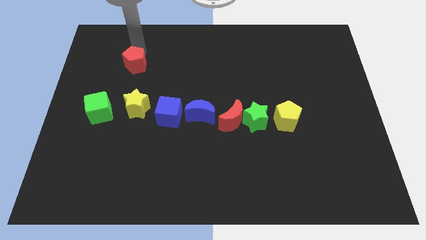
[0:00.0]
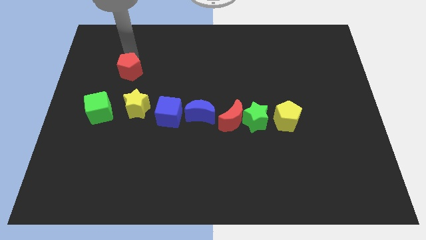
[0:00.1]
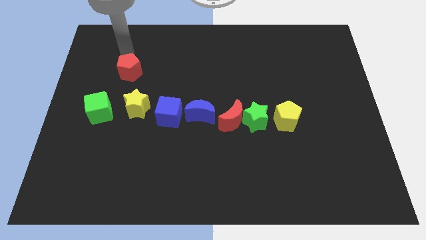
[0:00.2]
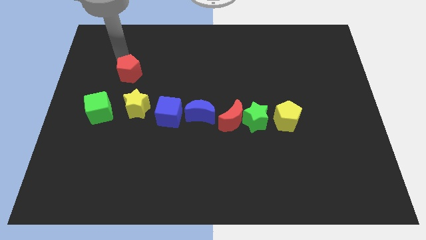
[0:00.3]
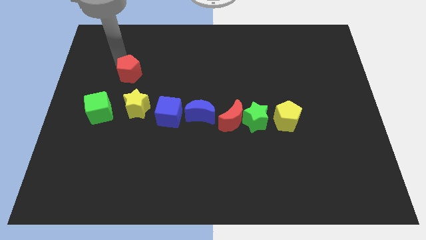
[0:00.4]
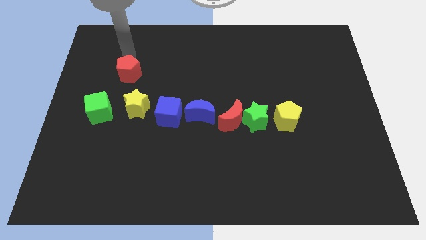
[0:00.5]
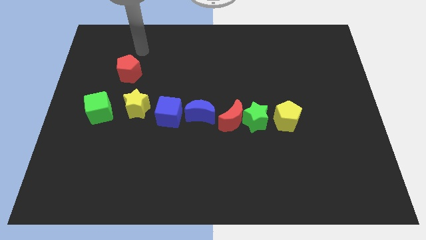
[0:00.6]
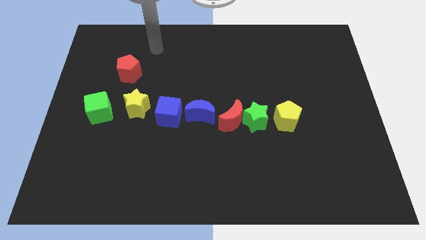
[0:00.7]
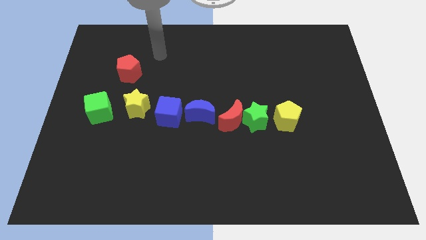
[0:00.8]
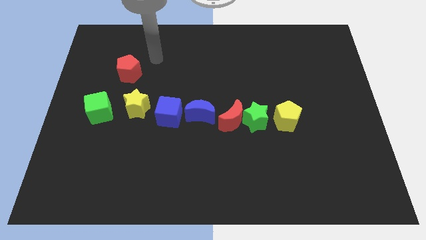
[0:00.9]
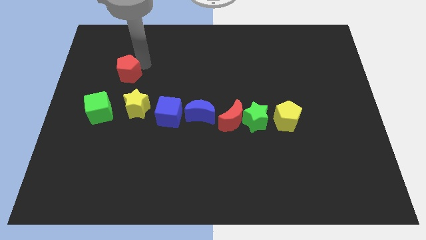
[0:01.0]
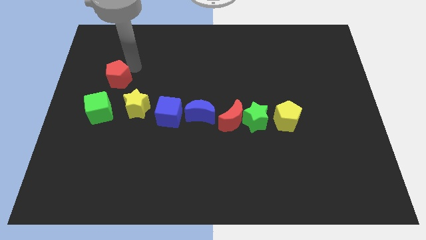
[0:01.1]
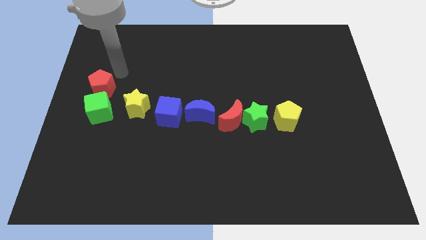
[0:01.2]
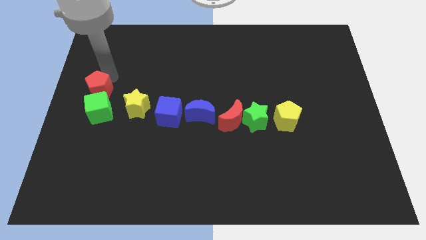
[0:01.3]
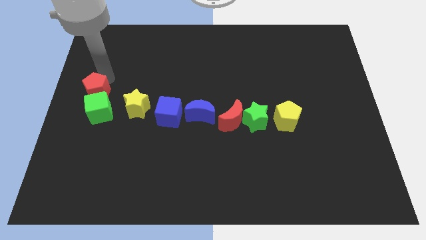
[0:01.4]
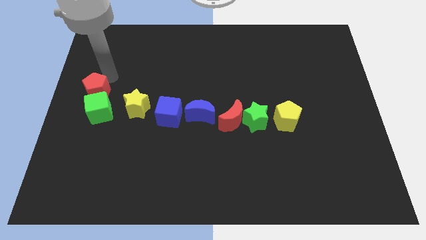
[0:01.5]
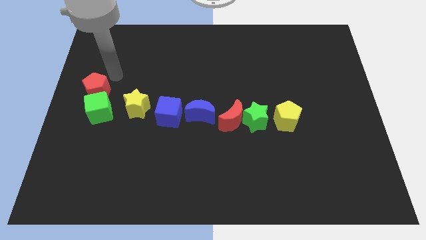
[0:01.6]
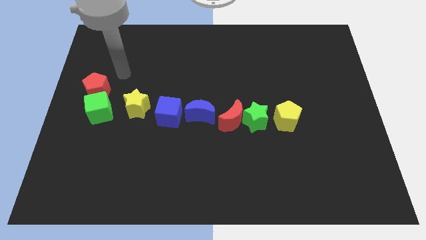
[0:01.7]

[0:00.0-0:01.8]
move the red pentagon above the green cube

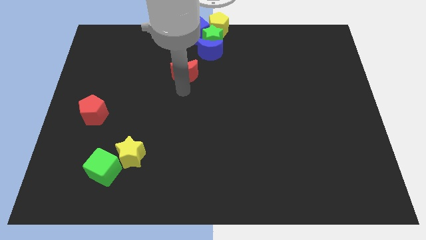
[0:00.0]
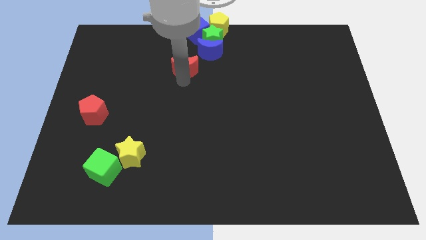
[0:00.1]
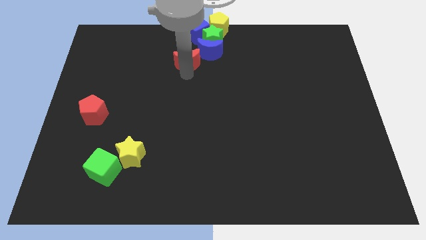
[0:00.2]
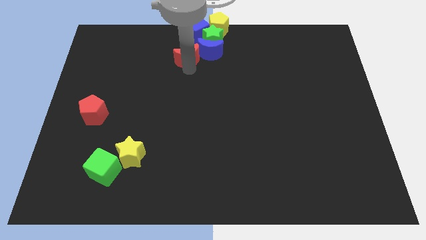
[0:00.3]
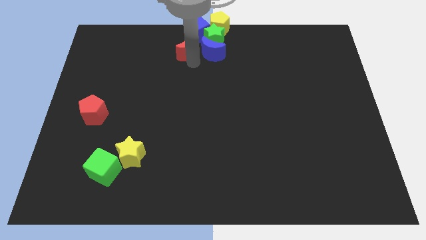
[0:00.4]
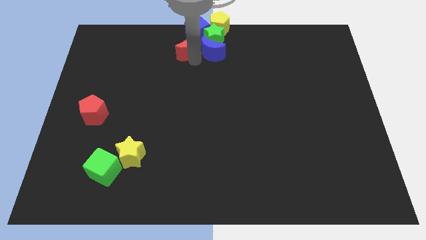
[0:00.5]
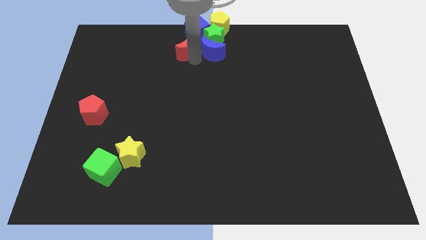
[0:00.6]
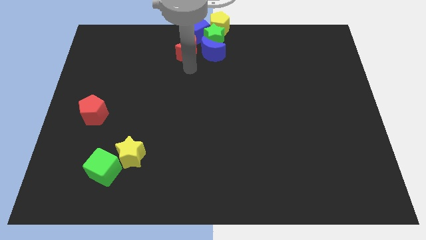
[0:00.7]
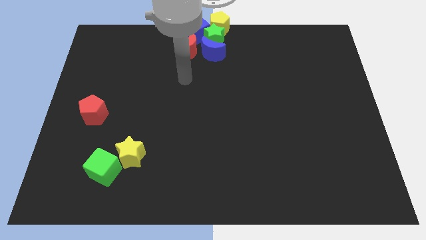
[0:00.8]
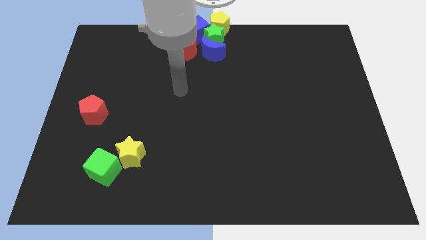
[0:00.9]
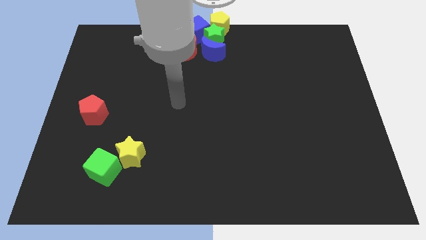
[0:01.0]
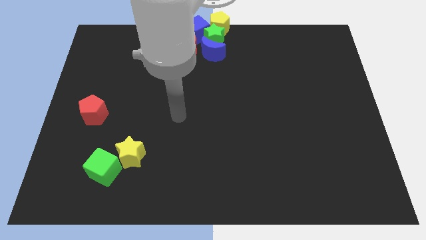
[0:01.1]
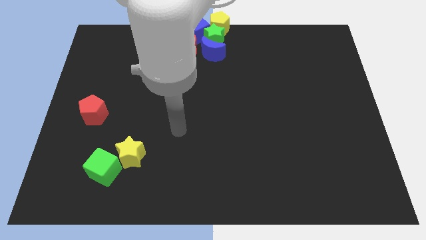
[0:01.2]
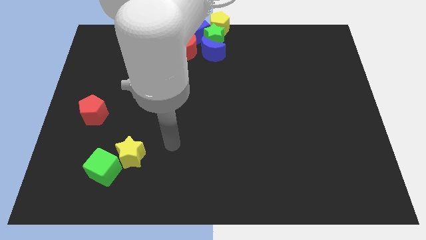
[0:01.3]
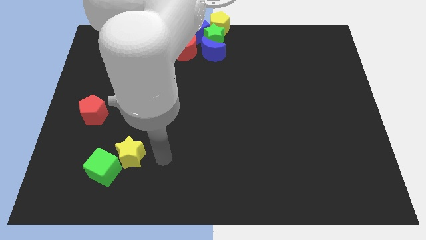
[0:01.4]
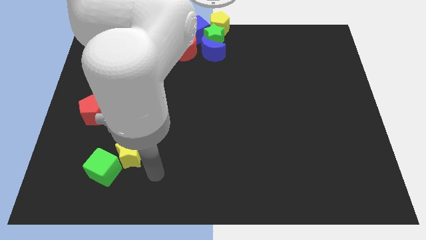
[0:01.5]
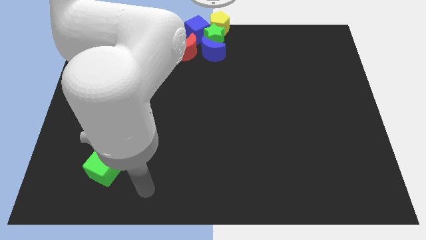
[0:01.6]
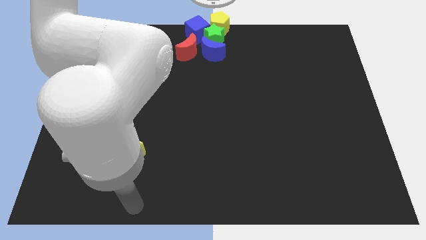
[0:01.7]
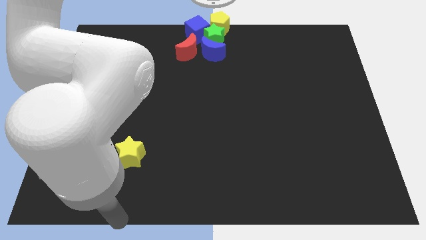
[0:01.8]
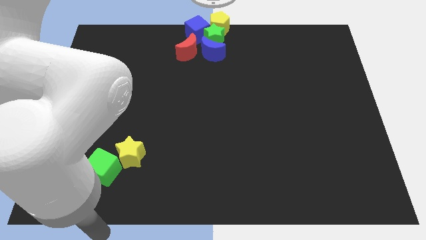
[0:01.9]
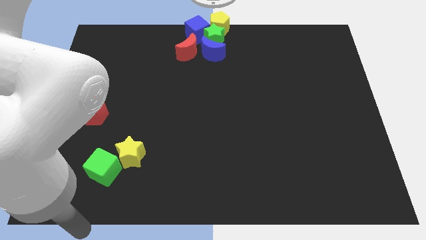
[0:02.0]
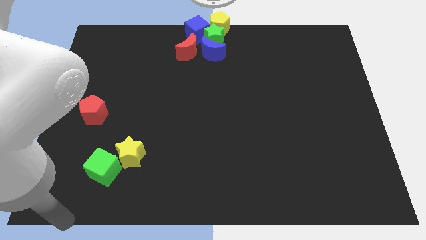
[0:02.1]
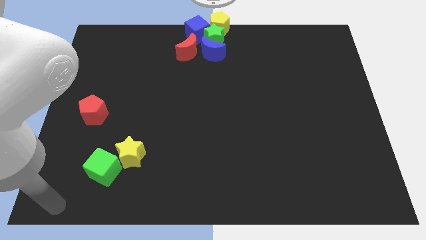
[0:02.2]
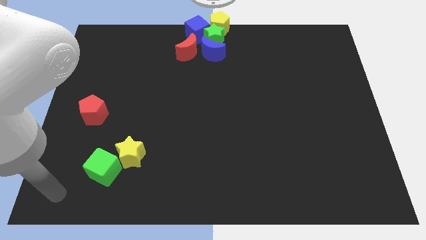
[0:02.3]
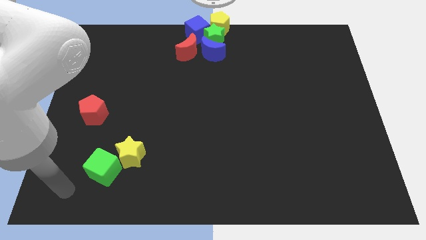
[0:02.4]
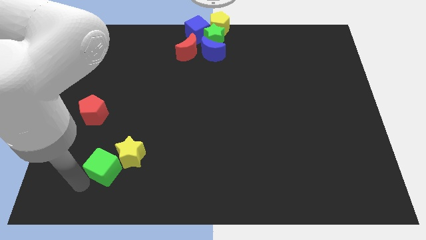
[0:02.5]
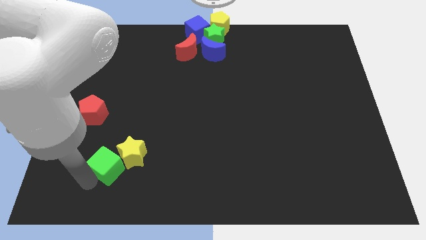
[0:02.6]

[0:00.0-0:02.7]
move your arm towards the green cube

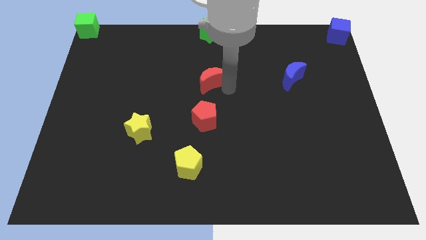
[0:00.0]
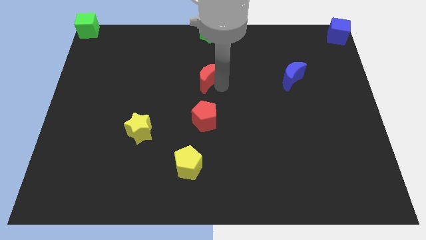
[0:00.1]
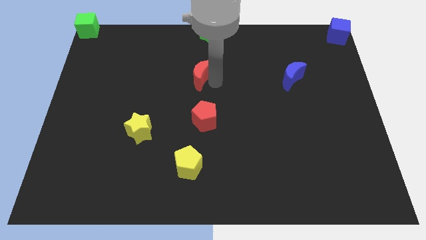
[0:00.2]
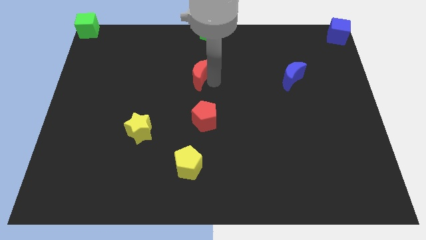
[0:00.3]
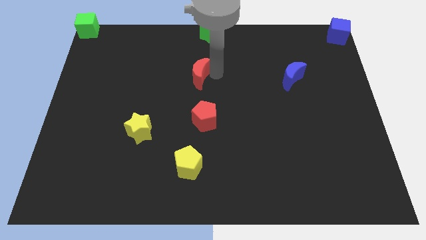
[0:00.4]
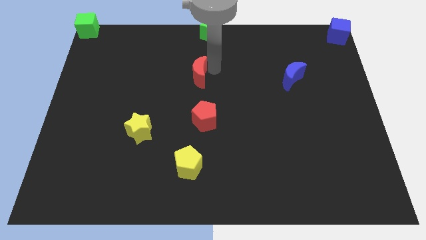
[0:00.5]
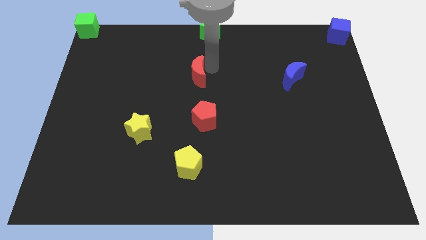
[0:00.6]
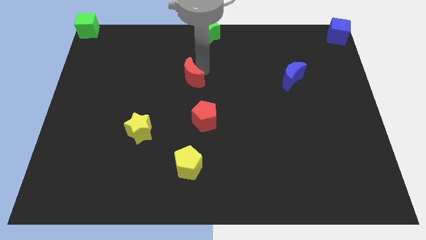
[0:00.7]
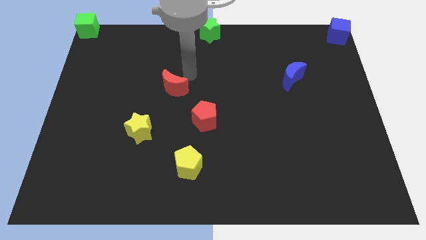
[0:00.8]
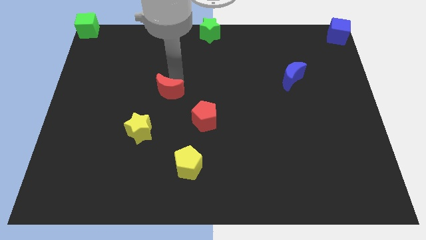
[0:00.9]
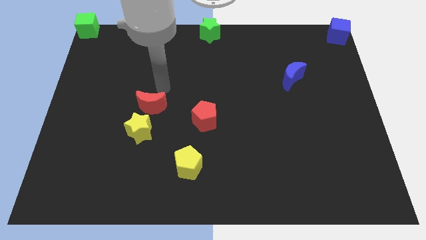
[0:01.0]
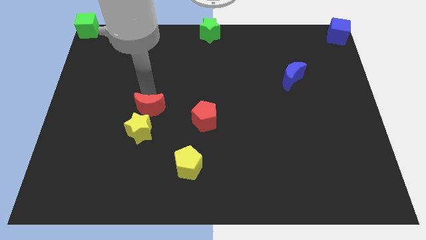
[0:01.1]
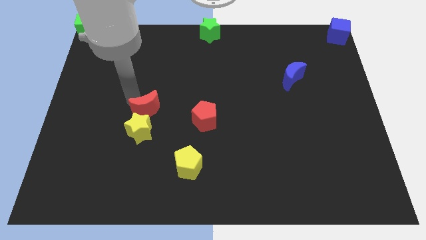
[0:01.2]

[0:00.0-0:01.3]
push the red crescent towards the top side of the yellow star

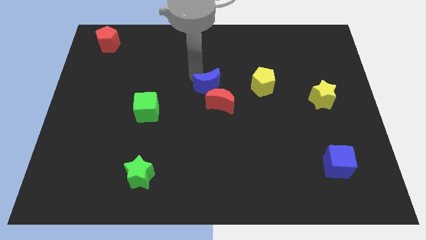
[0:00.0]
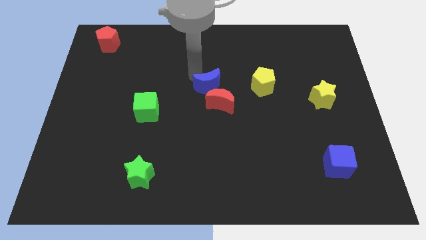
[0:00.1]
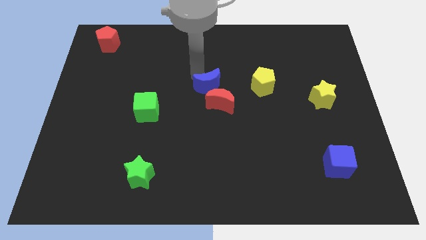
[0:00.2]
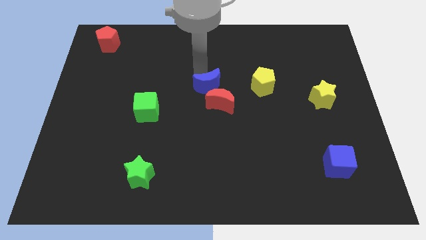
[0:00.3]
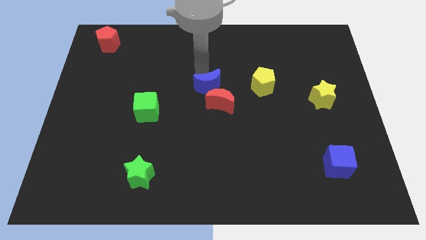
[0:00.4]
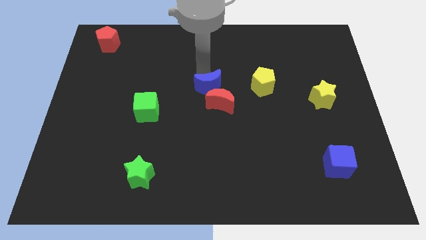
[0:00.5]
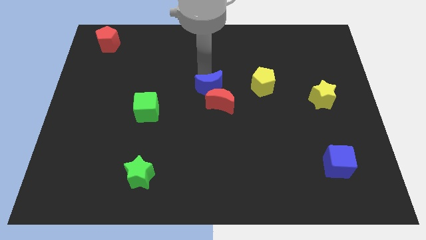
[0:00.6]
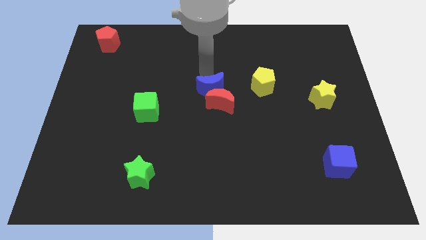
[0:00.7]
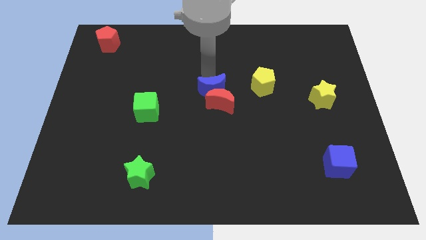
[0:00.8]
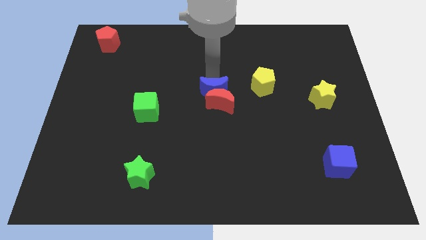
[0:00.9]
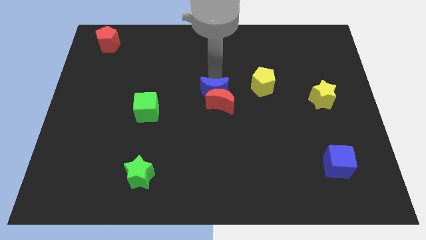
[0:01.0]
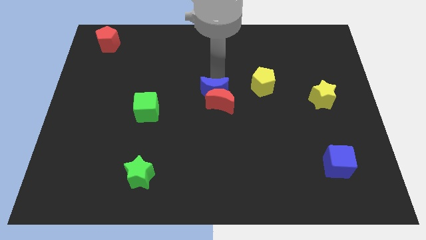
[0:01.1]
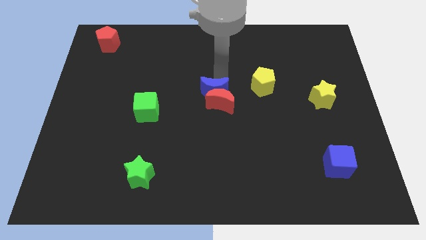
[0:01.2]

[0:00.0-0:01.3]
slightly push the blue crescent towards the red crescent

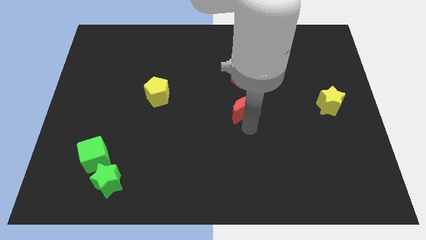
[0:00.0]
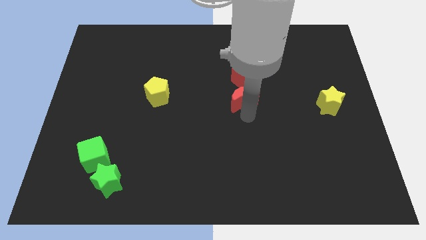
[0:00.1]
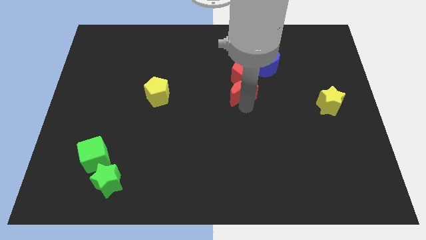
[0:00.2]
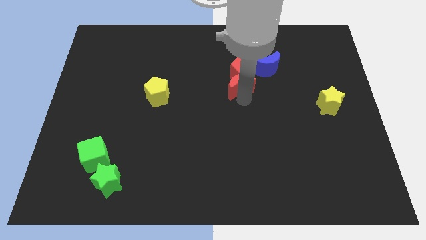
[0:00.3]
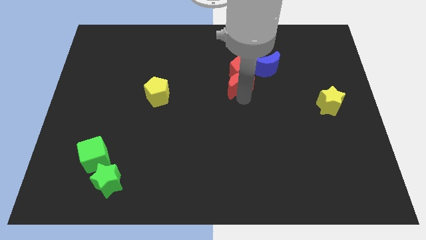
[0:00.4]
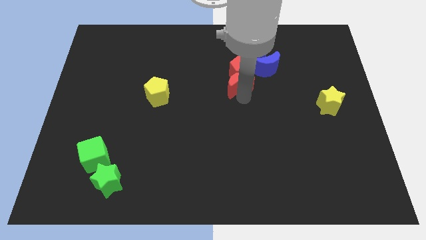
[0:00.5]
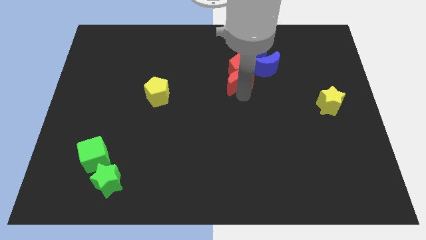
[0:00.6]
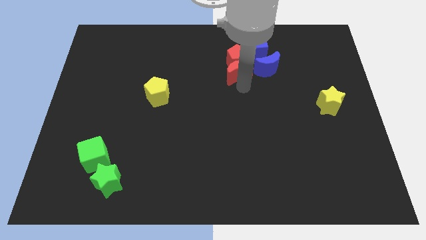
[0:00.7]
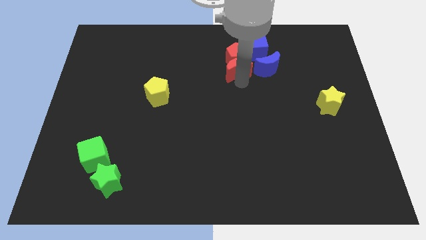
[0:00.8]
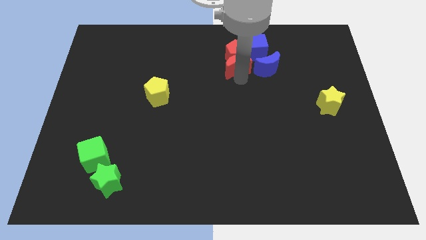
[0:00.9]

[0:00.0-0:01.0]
push the red blocks towards the top side of the board

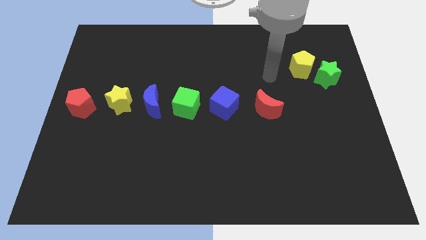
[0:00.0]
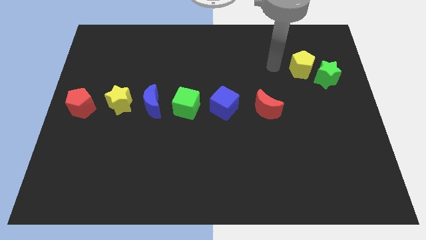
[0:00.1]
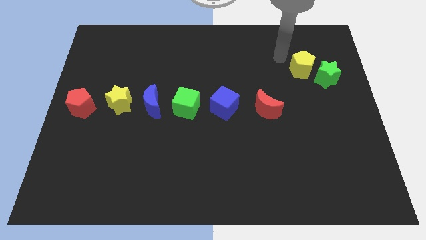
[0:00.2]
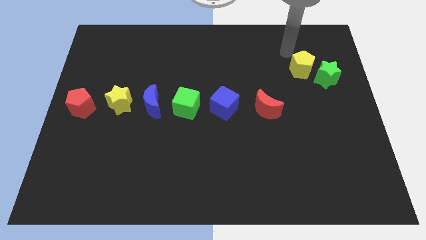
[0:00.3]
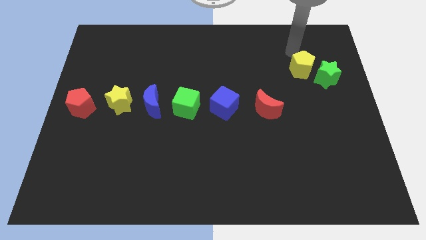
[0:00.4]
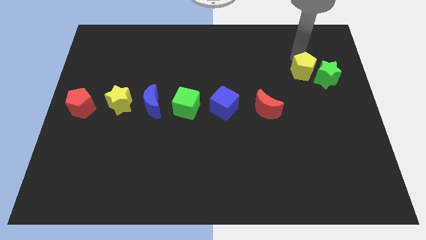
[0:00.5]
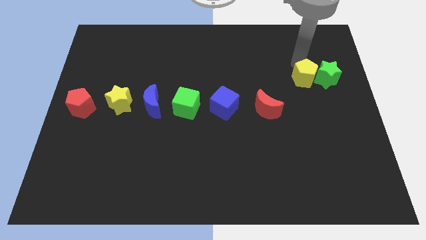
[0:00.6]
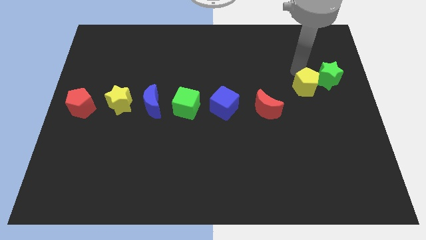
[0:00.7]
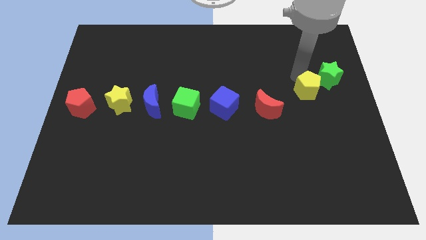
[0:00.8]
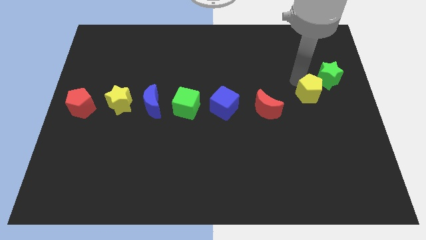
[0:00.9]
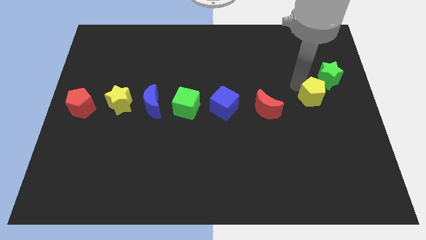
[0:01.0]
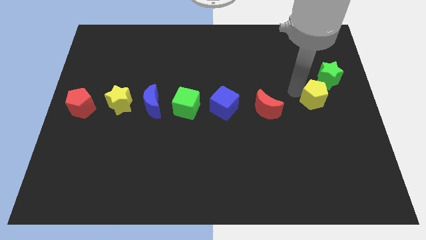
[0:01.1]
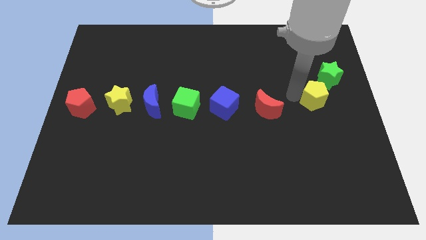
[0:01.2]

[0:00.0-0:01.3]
push the yellow pentagon slightly towards bottom side of the board
